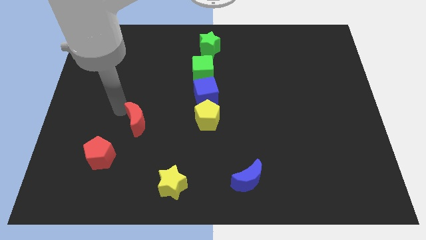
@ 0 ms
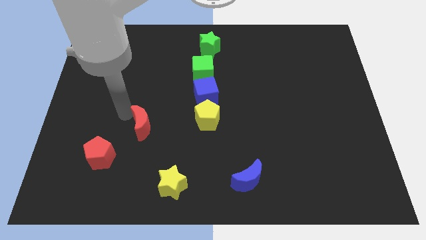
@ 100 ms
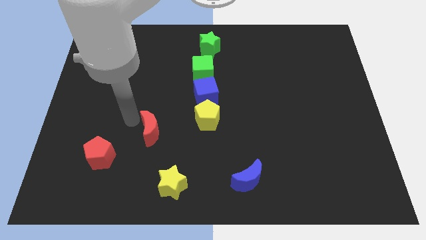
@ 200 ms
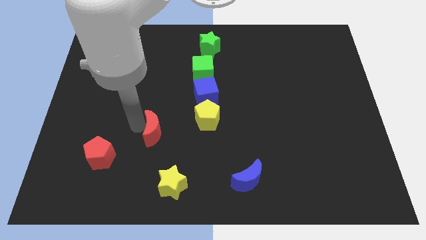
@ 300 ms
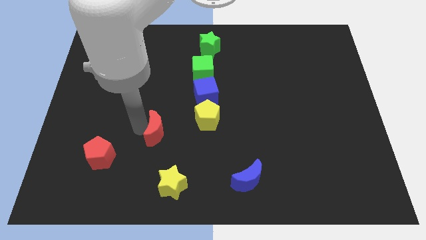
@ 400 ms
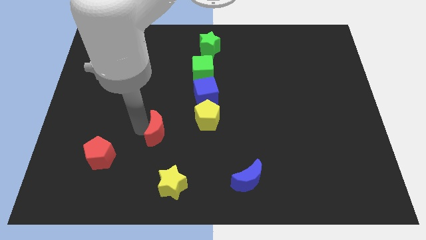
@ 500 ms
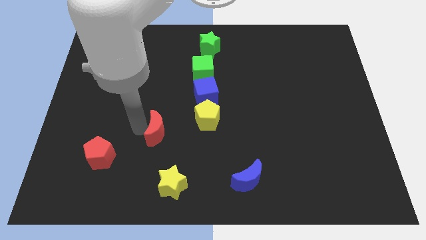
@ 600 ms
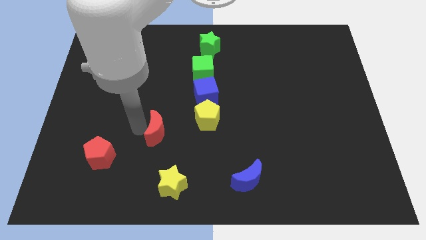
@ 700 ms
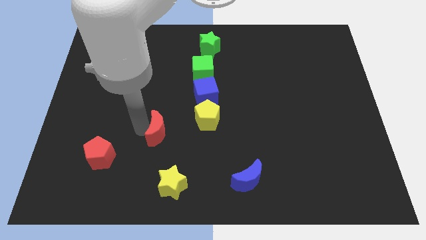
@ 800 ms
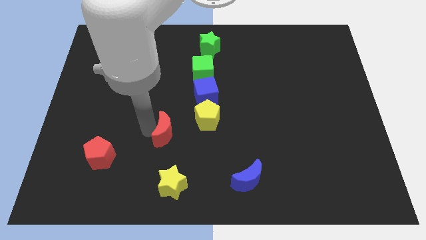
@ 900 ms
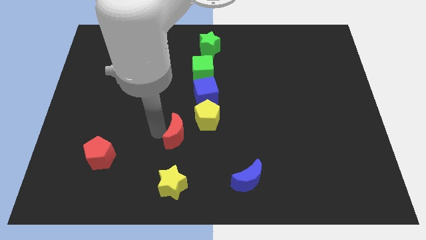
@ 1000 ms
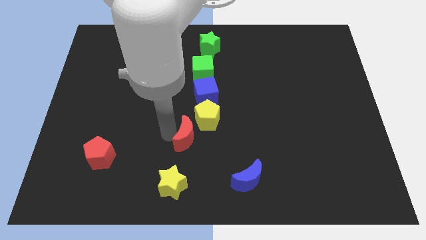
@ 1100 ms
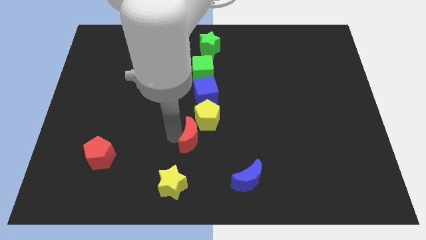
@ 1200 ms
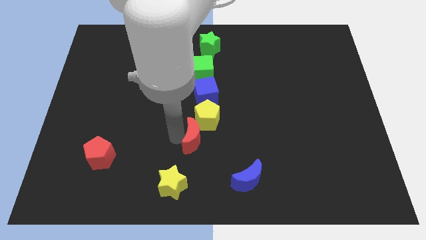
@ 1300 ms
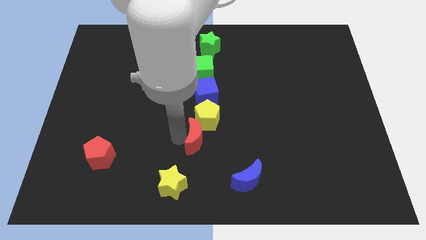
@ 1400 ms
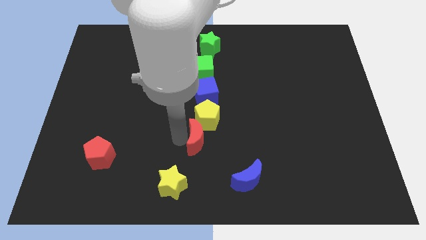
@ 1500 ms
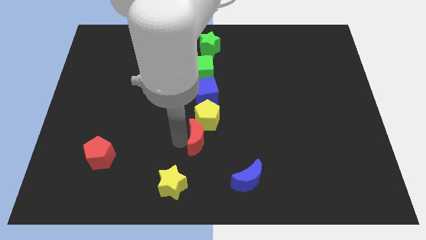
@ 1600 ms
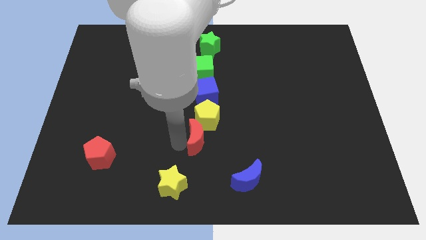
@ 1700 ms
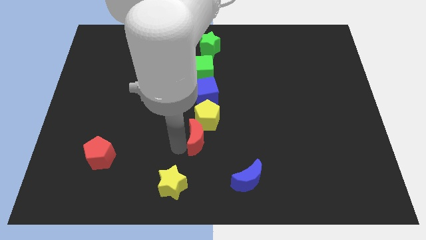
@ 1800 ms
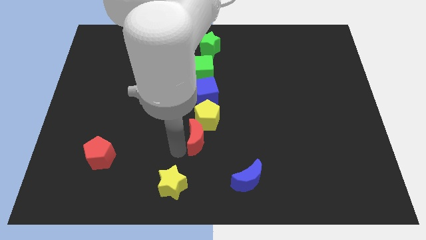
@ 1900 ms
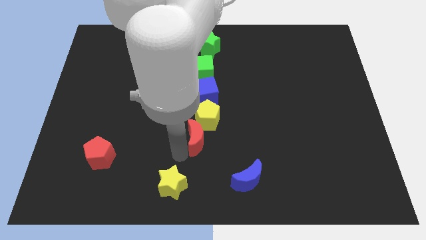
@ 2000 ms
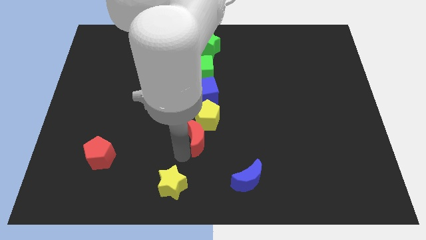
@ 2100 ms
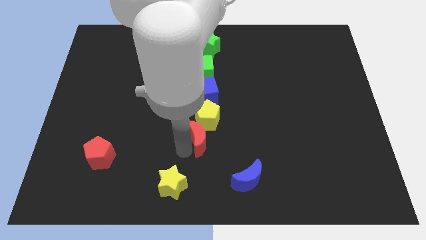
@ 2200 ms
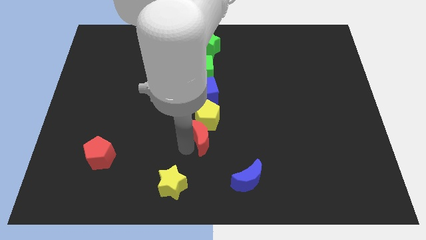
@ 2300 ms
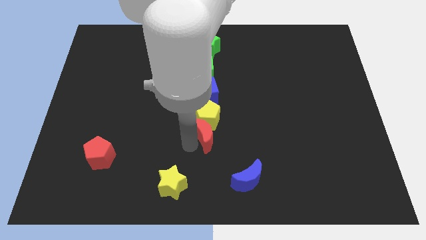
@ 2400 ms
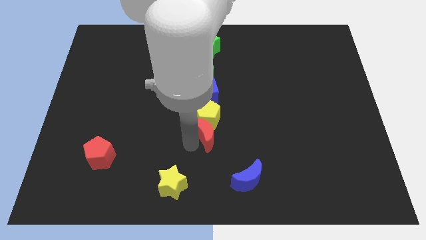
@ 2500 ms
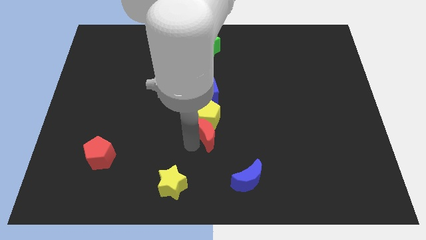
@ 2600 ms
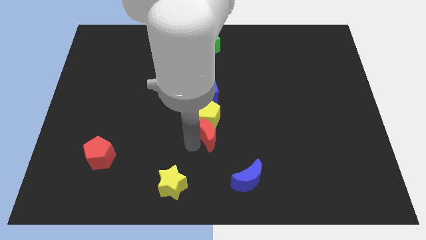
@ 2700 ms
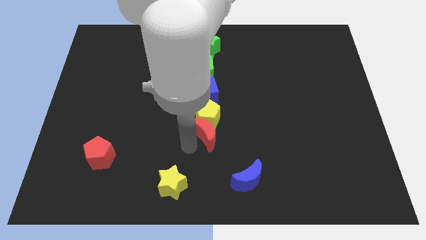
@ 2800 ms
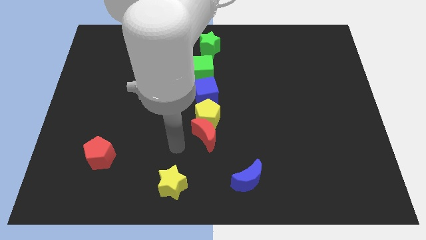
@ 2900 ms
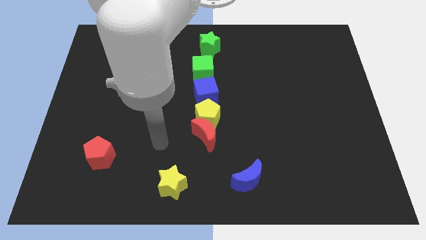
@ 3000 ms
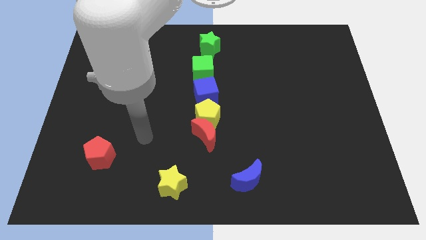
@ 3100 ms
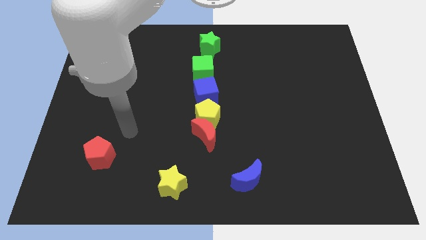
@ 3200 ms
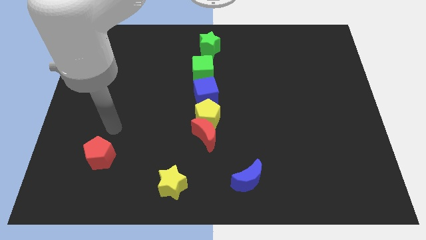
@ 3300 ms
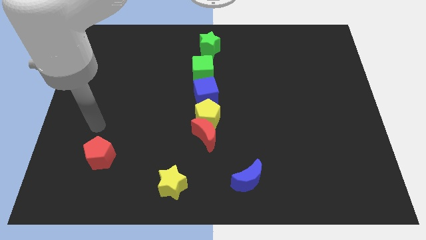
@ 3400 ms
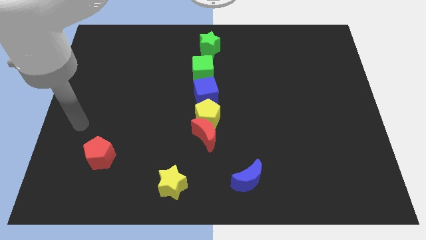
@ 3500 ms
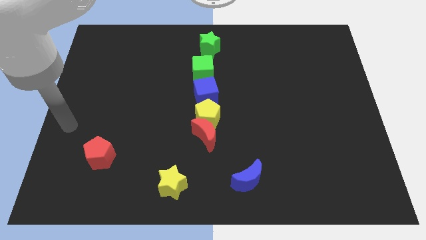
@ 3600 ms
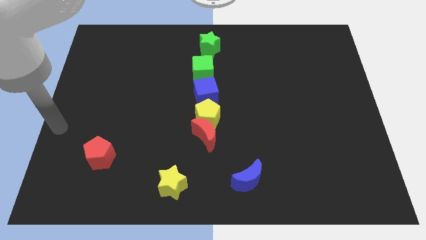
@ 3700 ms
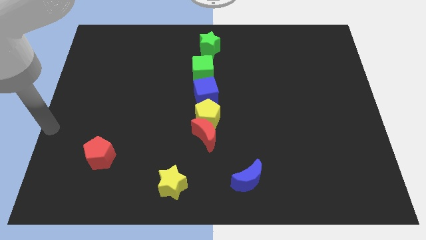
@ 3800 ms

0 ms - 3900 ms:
move the red moon below the yellow pentagon

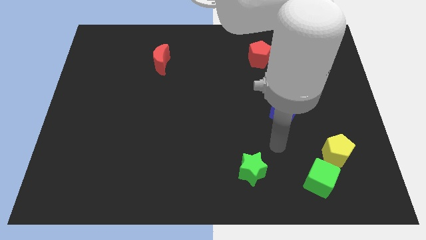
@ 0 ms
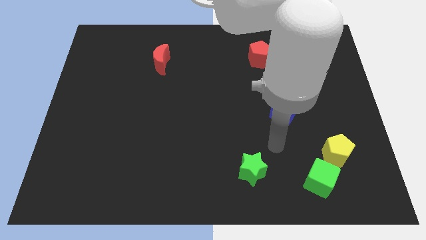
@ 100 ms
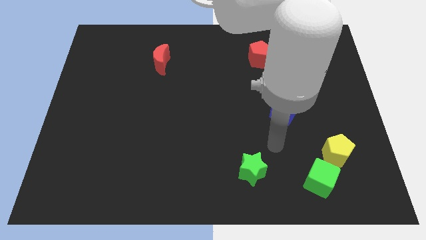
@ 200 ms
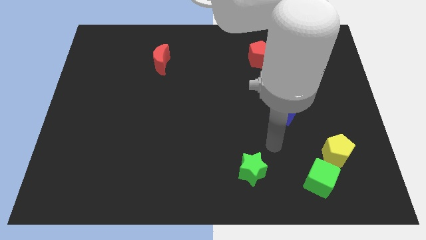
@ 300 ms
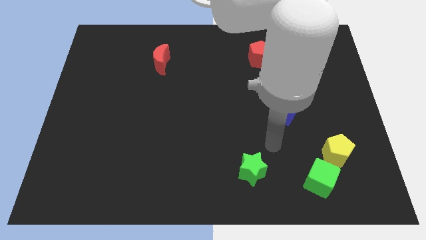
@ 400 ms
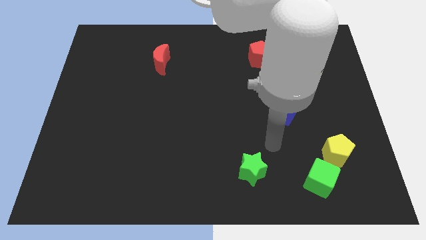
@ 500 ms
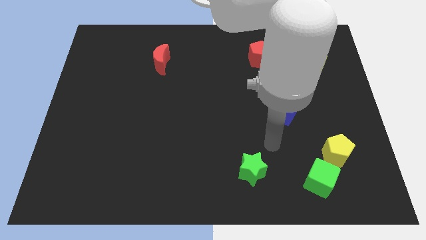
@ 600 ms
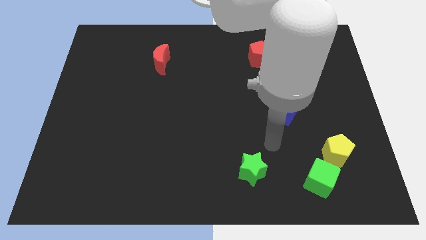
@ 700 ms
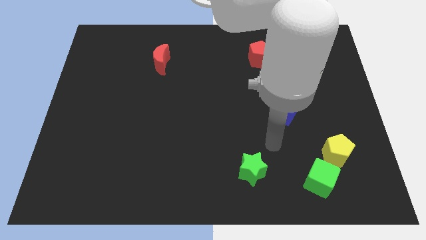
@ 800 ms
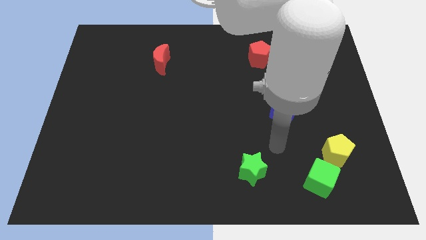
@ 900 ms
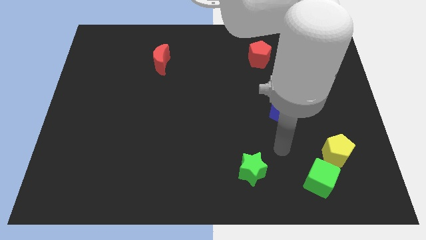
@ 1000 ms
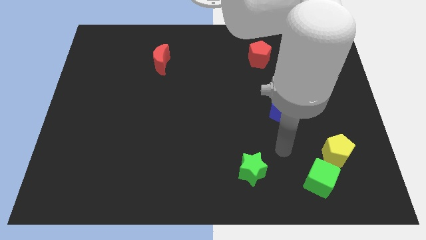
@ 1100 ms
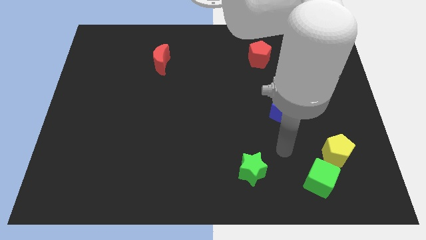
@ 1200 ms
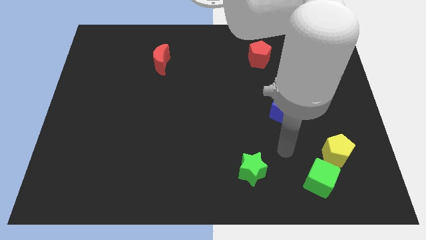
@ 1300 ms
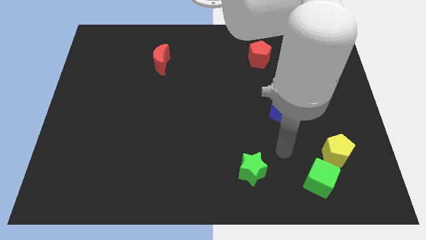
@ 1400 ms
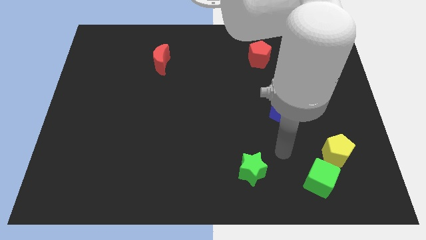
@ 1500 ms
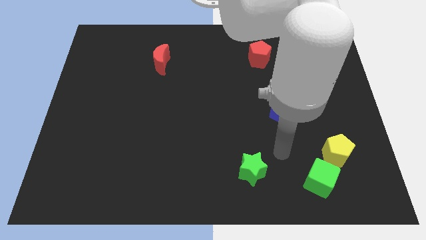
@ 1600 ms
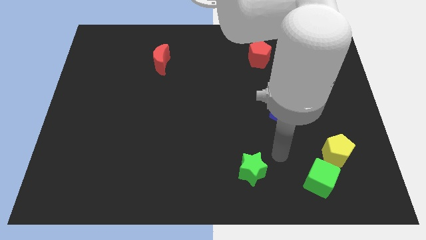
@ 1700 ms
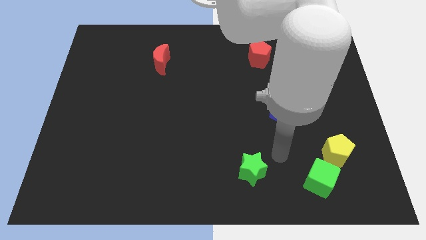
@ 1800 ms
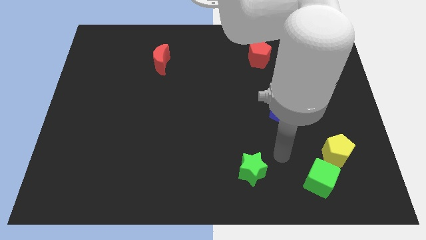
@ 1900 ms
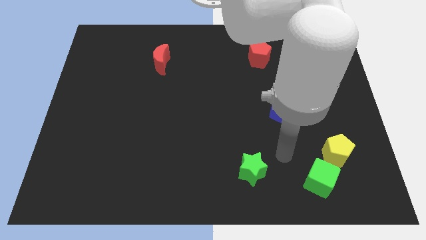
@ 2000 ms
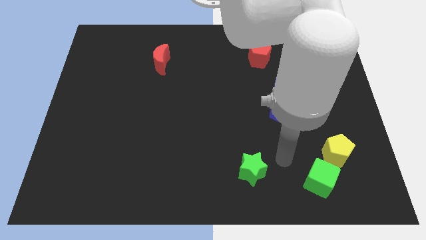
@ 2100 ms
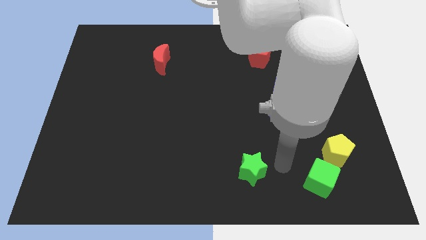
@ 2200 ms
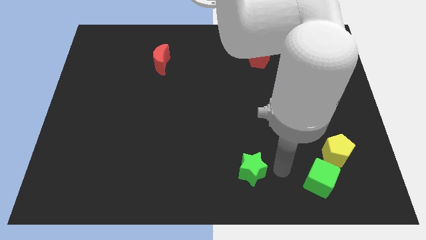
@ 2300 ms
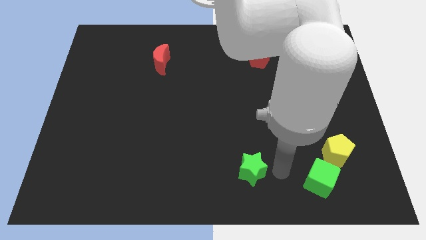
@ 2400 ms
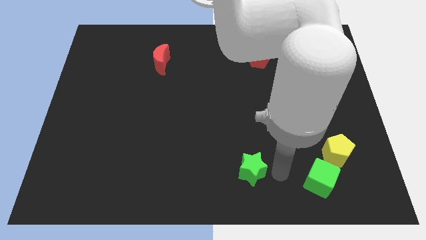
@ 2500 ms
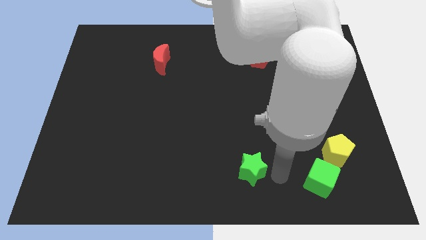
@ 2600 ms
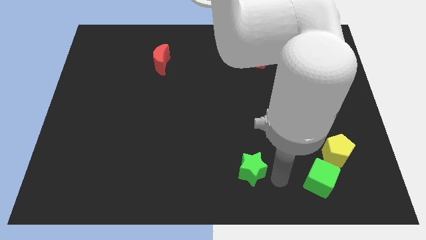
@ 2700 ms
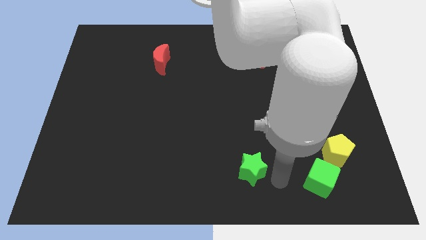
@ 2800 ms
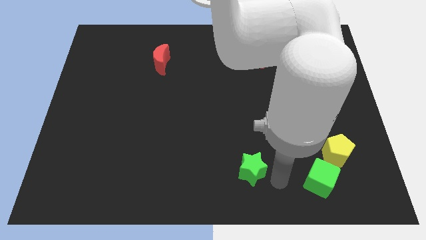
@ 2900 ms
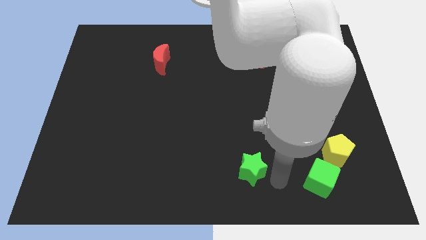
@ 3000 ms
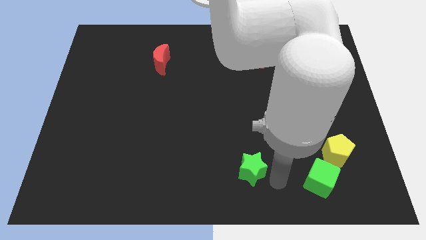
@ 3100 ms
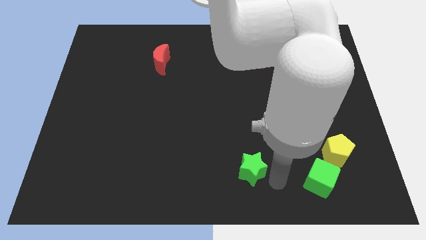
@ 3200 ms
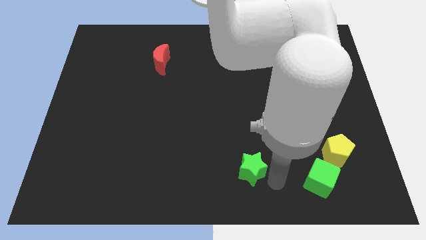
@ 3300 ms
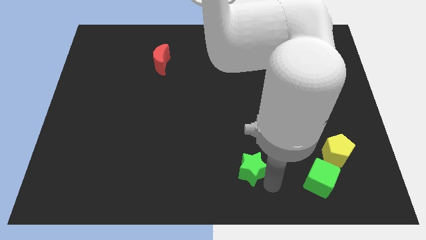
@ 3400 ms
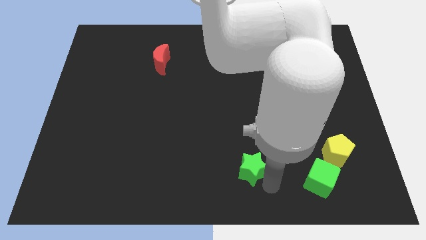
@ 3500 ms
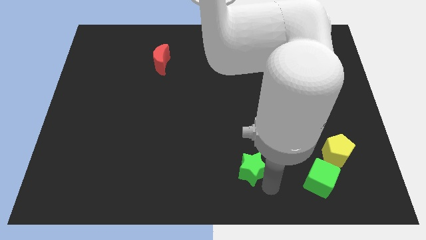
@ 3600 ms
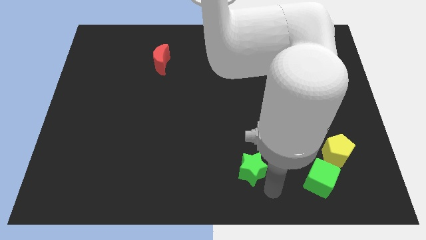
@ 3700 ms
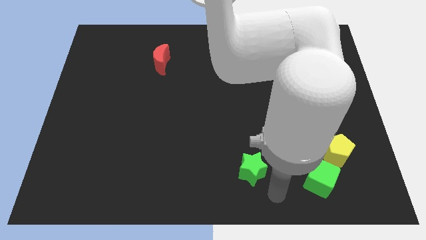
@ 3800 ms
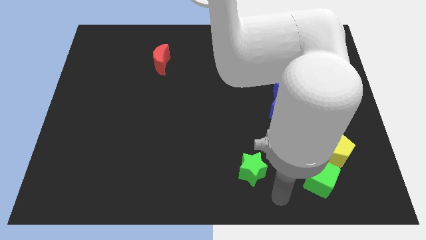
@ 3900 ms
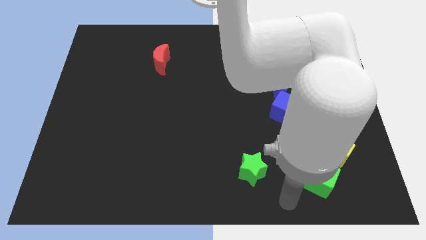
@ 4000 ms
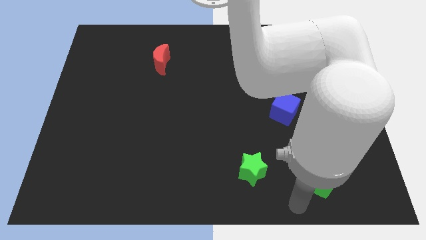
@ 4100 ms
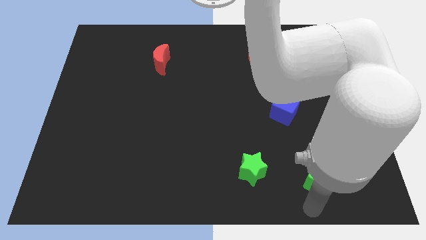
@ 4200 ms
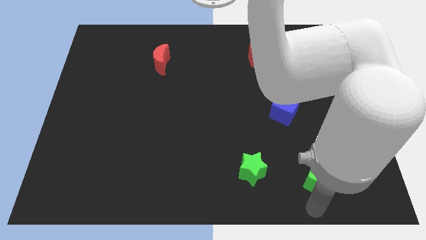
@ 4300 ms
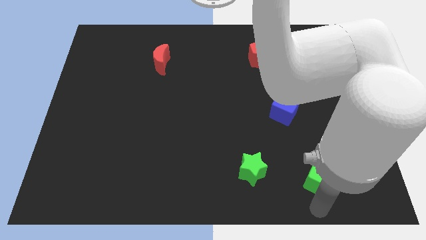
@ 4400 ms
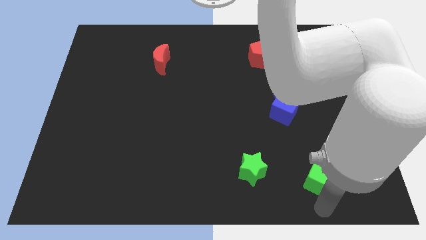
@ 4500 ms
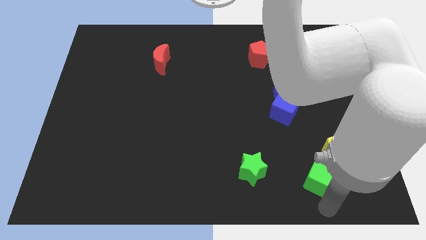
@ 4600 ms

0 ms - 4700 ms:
move your arm to the bottom right of the board

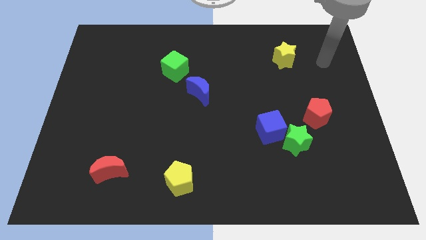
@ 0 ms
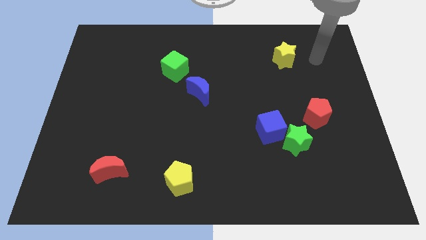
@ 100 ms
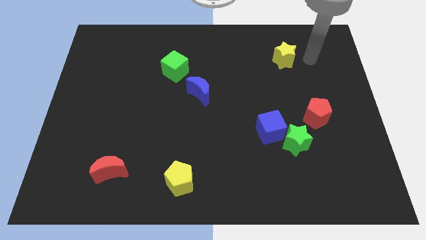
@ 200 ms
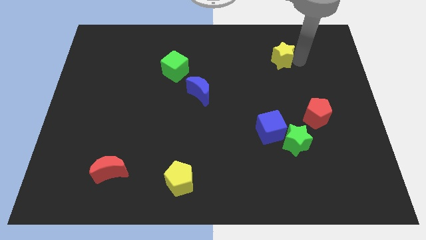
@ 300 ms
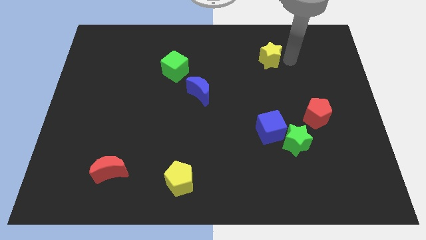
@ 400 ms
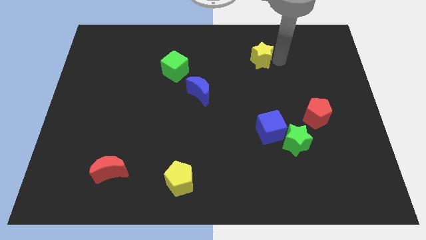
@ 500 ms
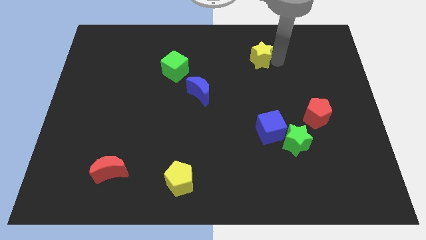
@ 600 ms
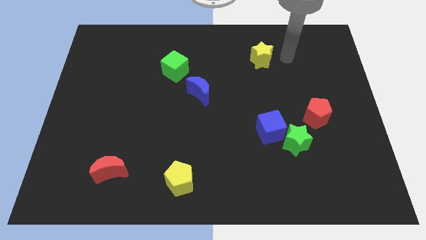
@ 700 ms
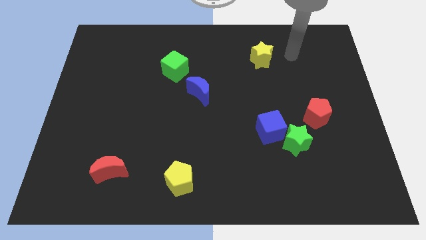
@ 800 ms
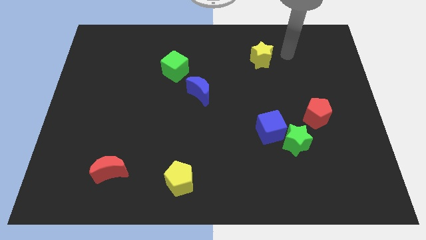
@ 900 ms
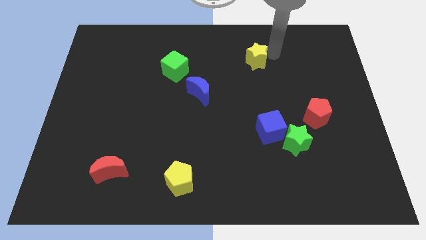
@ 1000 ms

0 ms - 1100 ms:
move the yellow star slightly to the left
